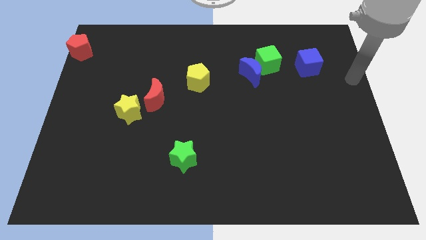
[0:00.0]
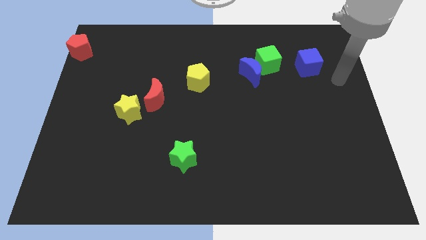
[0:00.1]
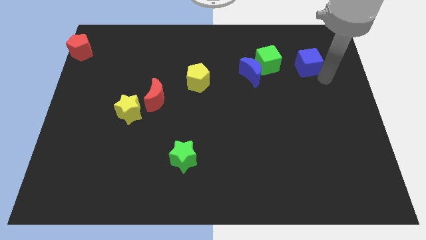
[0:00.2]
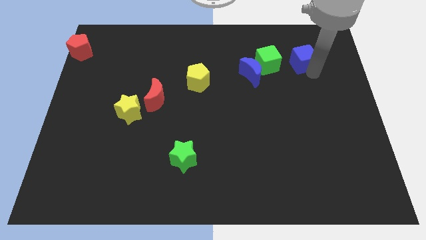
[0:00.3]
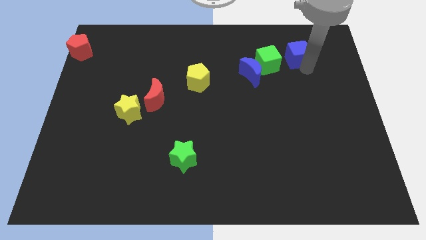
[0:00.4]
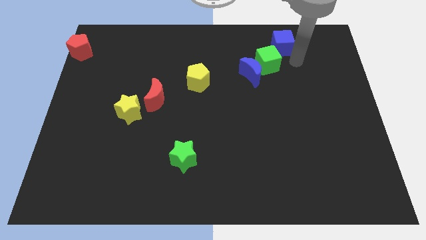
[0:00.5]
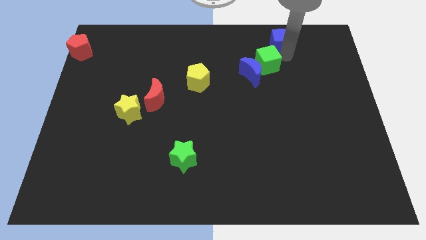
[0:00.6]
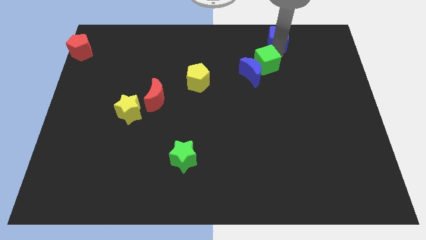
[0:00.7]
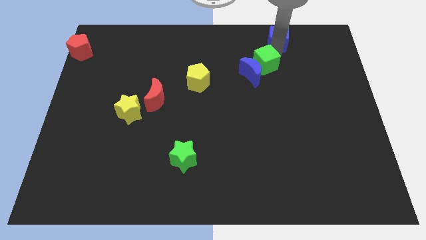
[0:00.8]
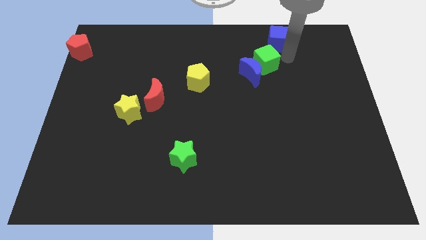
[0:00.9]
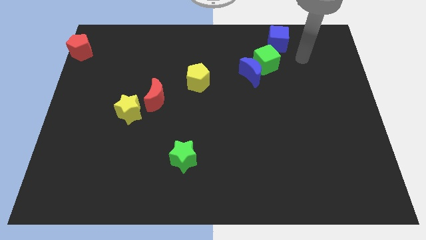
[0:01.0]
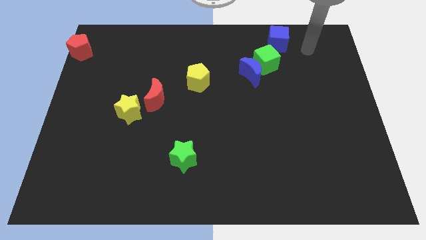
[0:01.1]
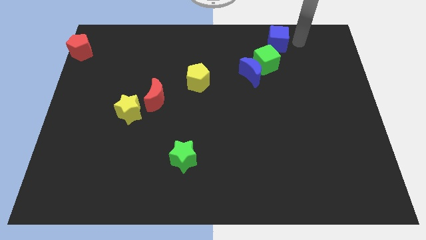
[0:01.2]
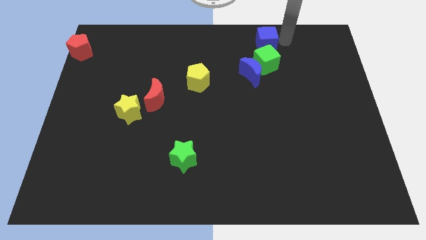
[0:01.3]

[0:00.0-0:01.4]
move the blue cube to the top of the green cube

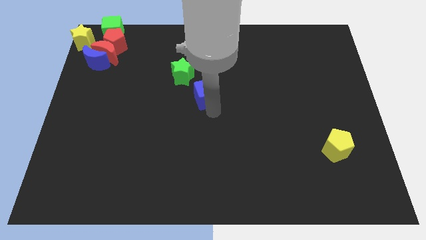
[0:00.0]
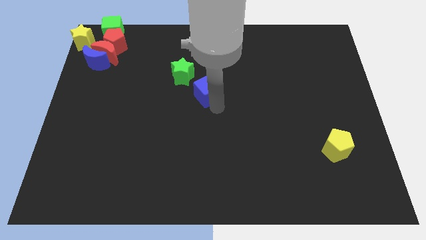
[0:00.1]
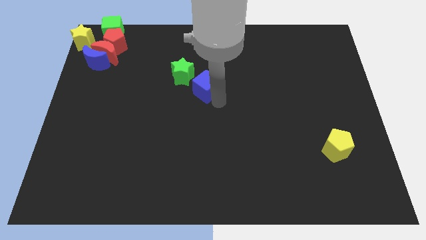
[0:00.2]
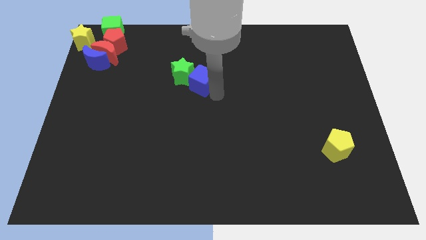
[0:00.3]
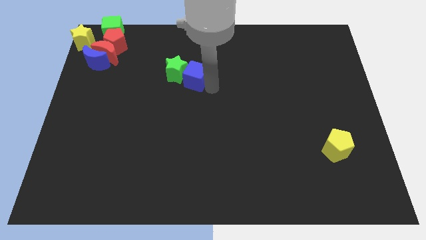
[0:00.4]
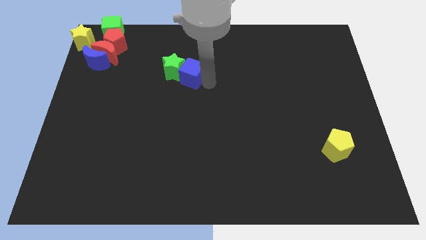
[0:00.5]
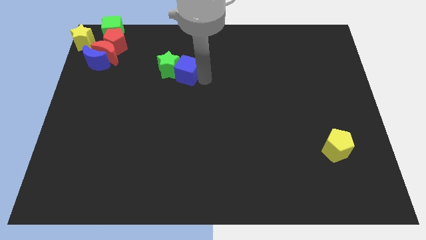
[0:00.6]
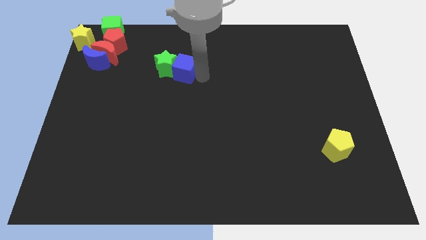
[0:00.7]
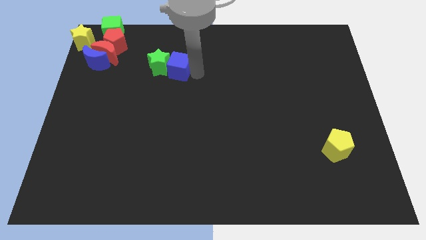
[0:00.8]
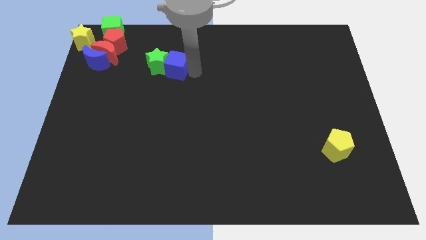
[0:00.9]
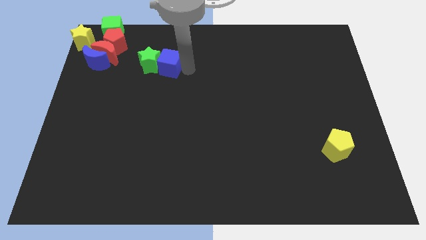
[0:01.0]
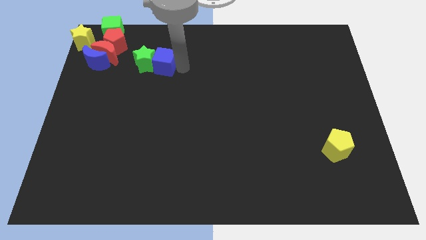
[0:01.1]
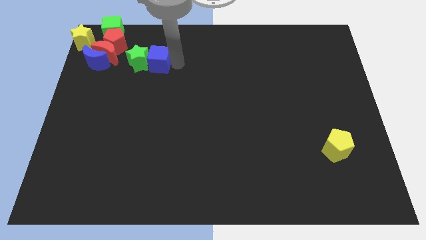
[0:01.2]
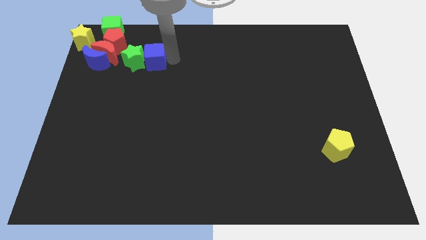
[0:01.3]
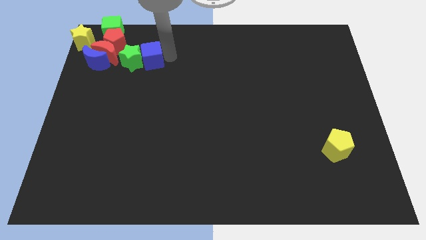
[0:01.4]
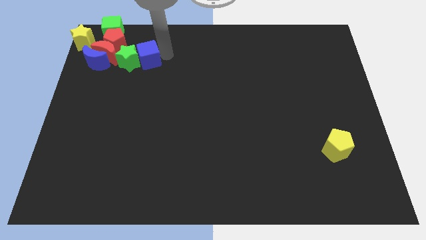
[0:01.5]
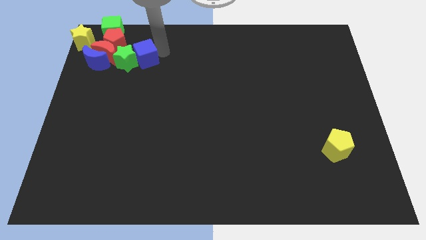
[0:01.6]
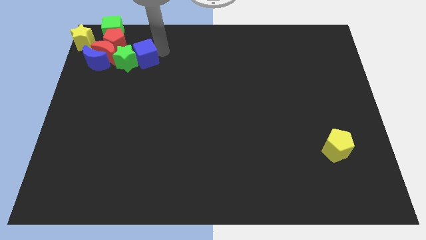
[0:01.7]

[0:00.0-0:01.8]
push the blue cube into the green star

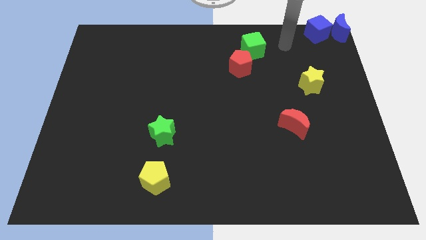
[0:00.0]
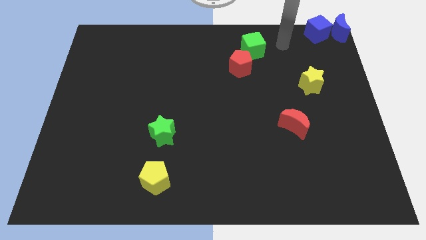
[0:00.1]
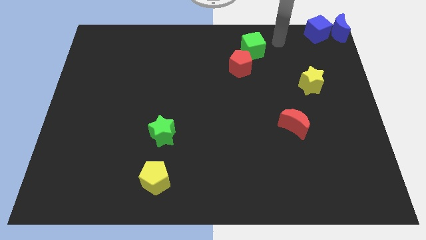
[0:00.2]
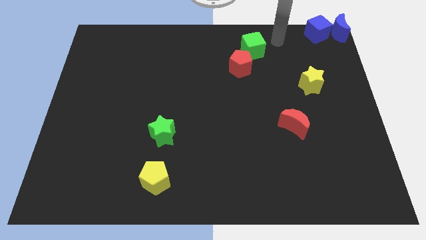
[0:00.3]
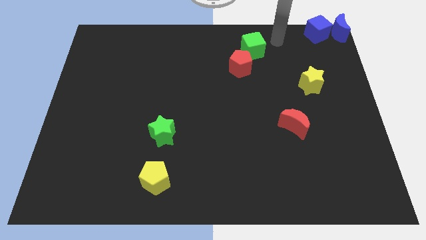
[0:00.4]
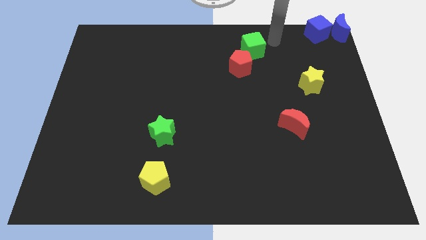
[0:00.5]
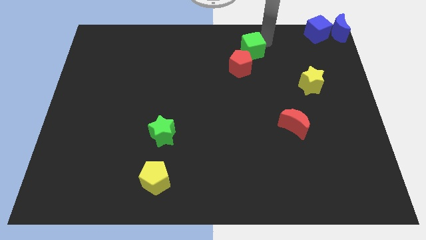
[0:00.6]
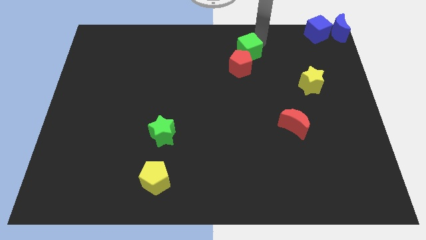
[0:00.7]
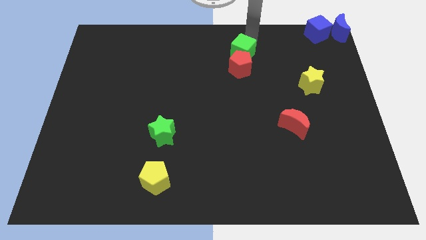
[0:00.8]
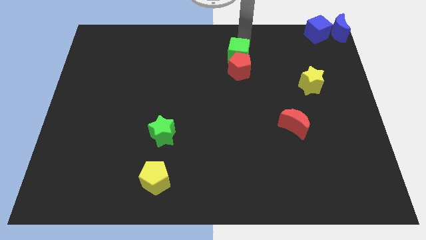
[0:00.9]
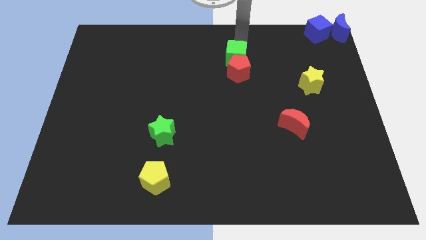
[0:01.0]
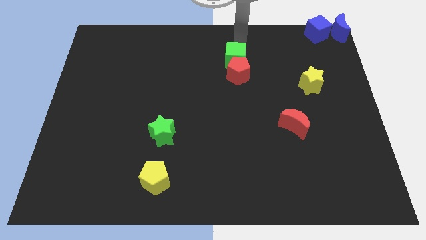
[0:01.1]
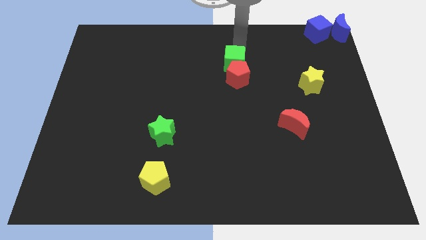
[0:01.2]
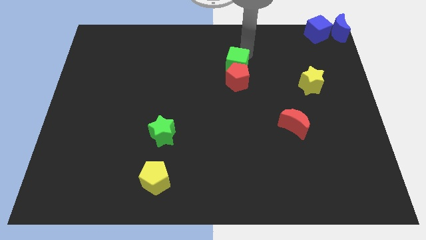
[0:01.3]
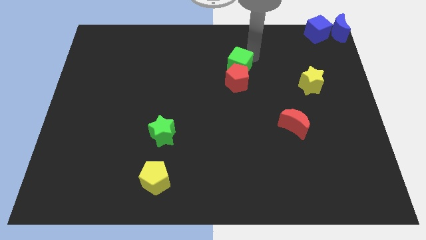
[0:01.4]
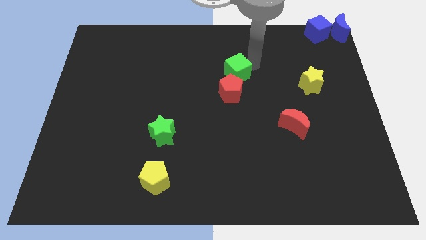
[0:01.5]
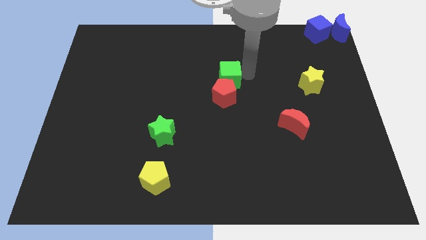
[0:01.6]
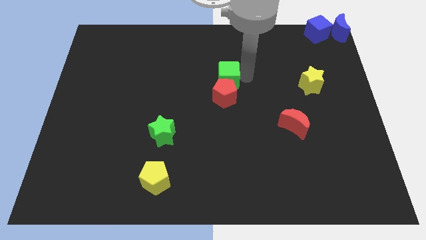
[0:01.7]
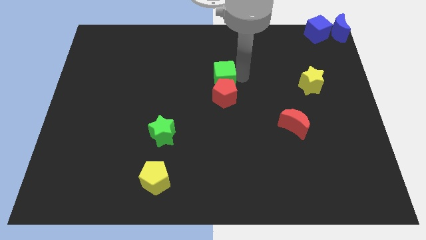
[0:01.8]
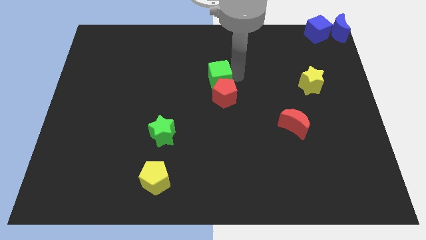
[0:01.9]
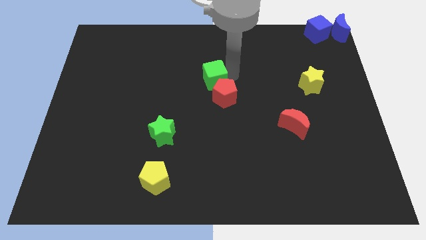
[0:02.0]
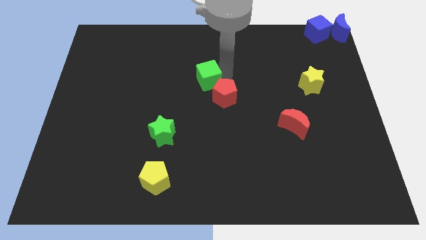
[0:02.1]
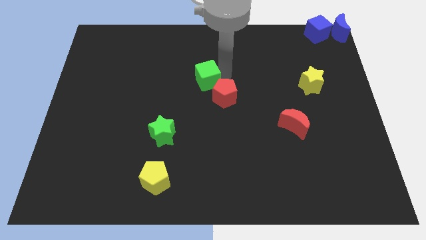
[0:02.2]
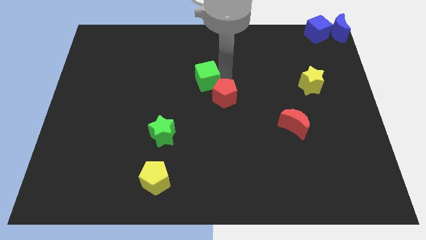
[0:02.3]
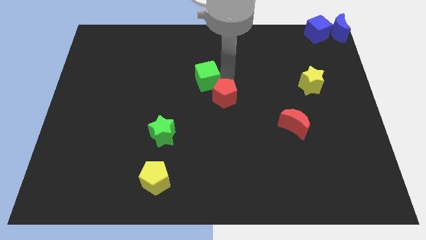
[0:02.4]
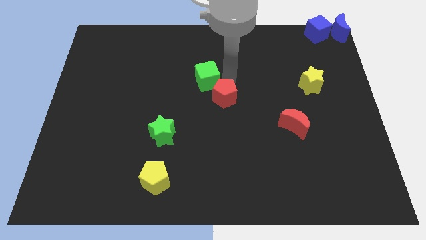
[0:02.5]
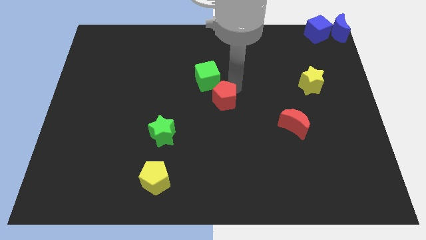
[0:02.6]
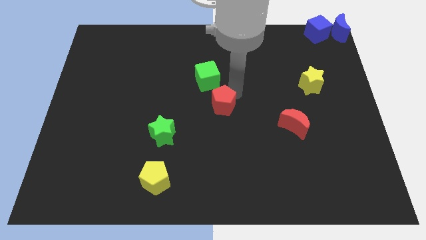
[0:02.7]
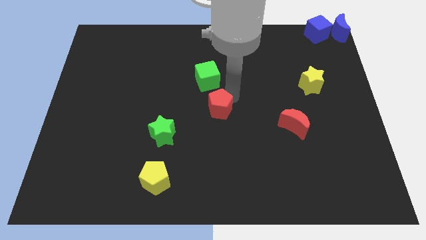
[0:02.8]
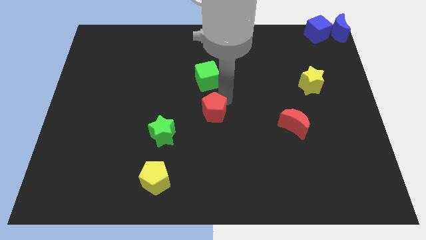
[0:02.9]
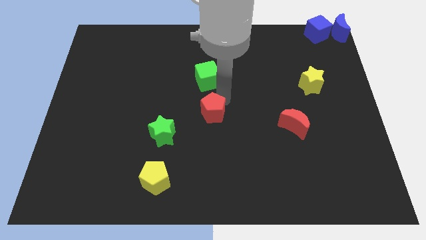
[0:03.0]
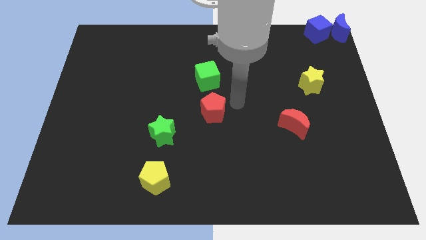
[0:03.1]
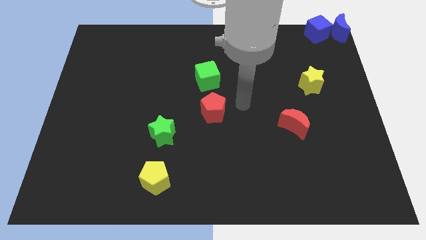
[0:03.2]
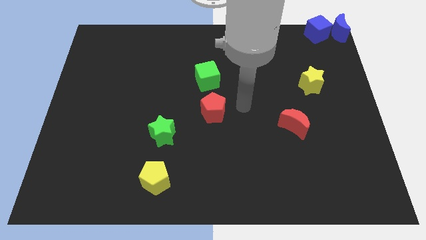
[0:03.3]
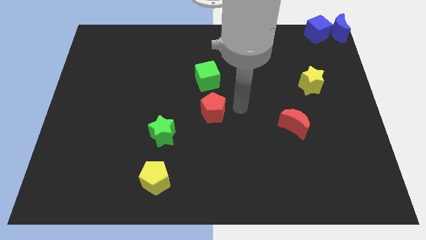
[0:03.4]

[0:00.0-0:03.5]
separate the red pentagon from green cube

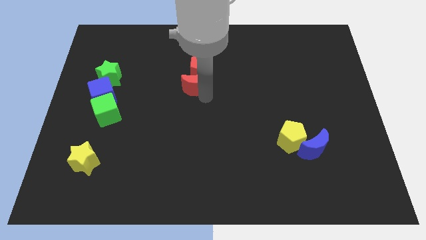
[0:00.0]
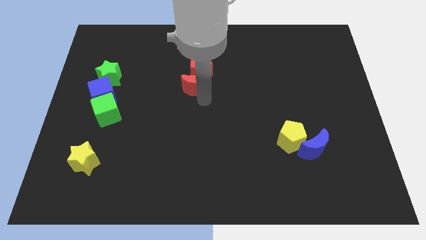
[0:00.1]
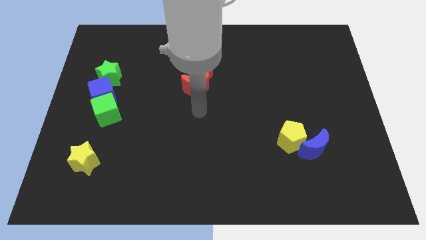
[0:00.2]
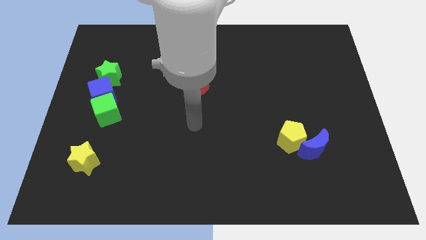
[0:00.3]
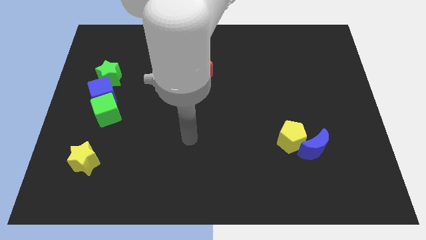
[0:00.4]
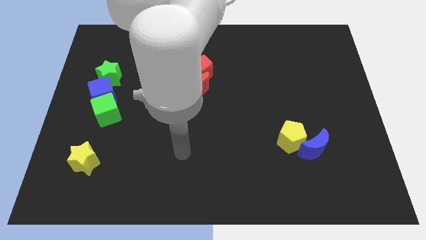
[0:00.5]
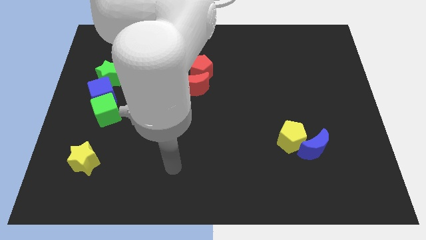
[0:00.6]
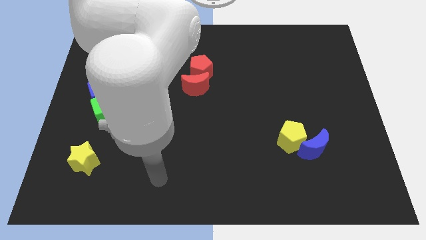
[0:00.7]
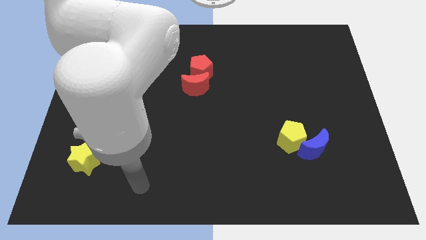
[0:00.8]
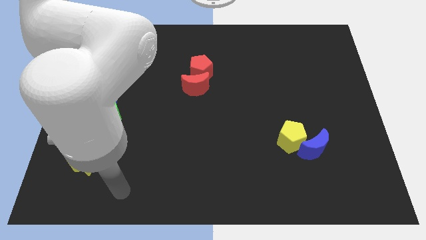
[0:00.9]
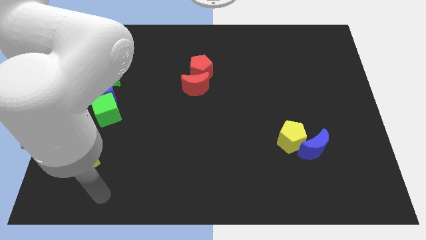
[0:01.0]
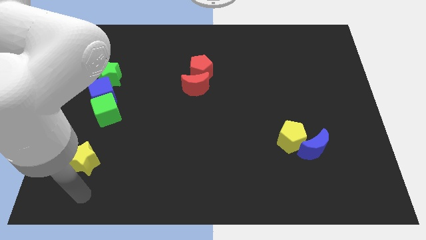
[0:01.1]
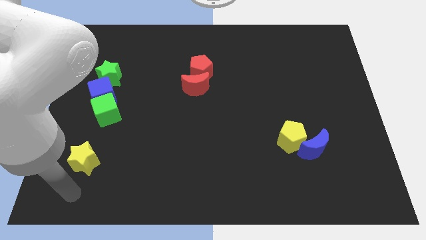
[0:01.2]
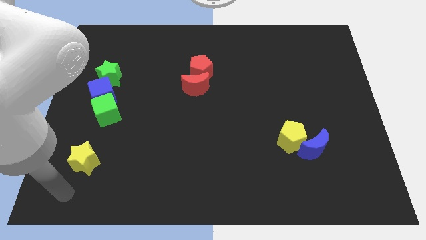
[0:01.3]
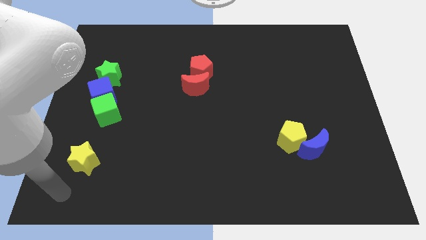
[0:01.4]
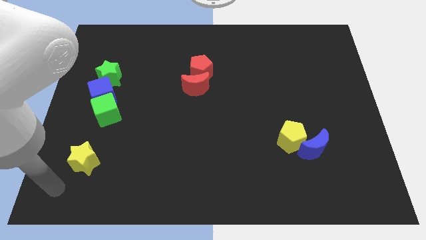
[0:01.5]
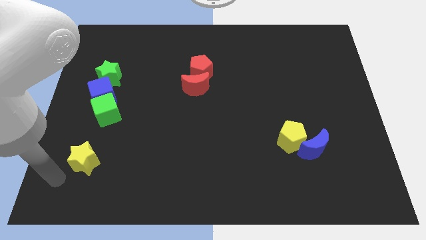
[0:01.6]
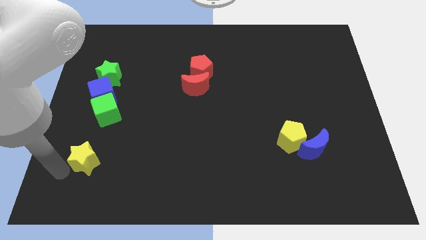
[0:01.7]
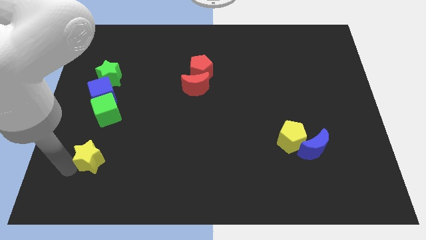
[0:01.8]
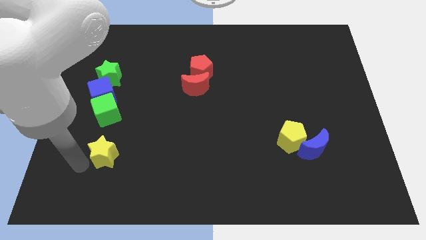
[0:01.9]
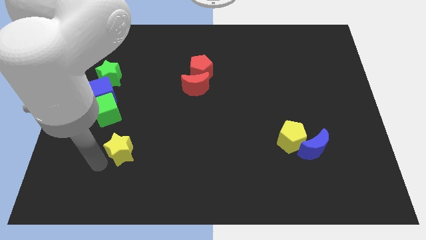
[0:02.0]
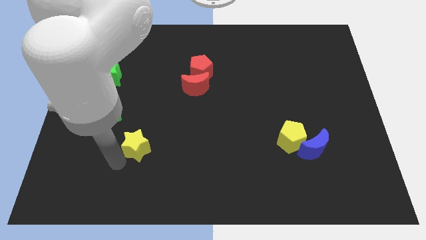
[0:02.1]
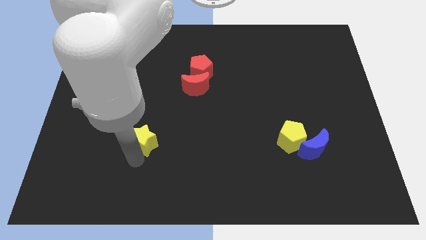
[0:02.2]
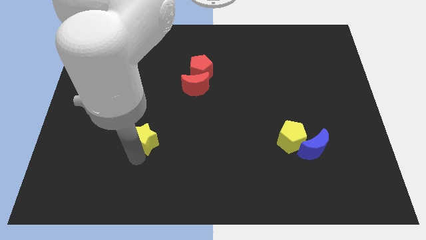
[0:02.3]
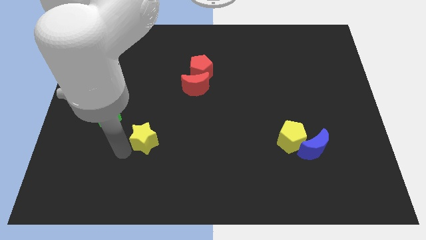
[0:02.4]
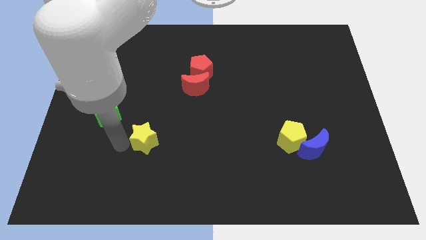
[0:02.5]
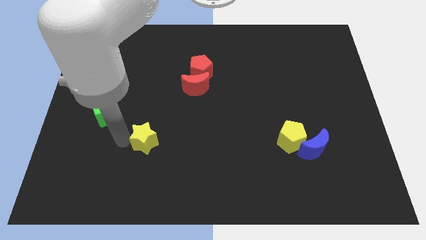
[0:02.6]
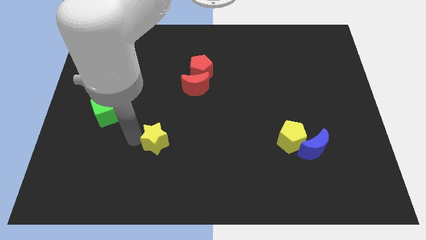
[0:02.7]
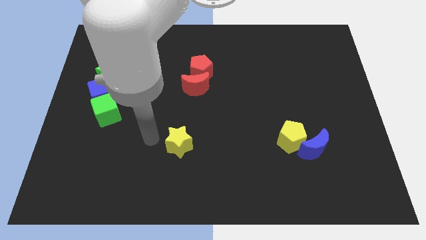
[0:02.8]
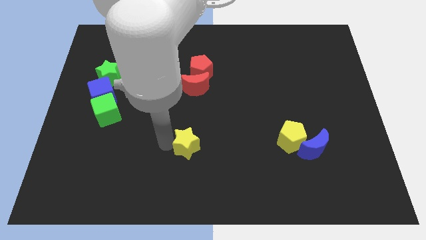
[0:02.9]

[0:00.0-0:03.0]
slide the yellow star below the red moon
